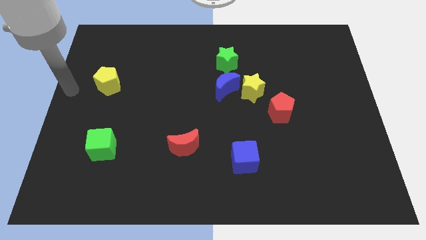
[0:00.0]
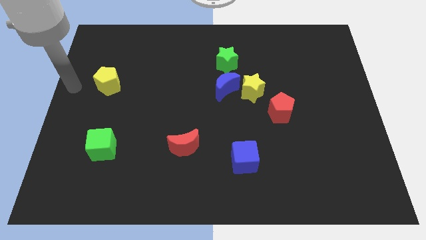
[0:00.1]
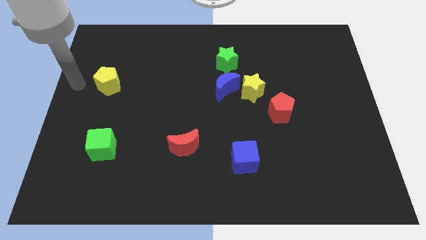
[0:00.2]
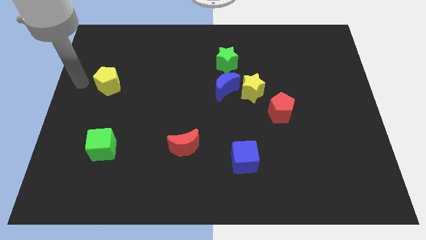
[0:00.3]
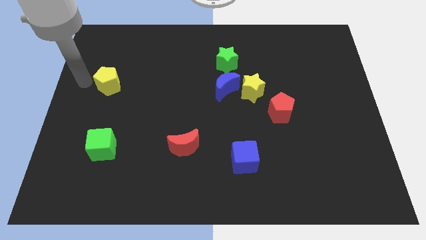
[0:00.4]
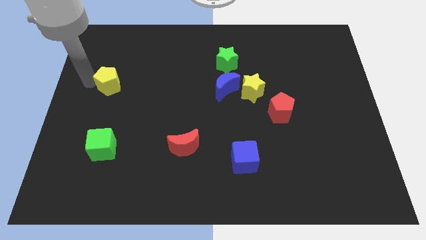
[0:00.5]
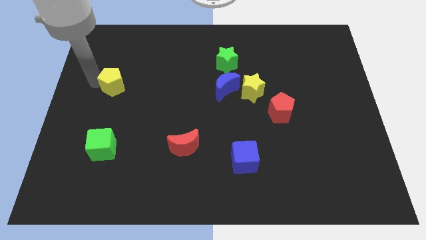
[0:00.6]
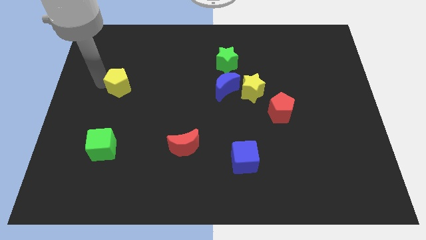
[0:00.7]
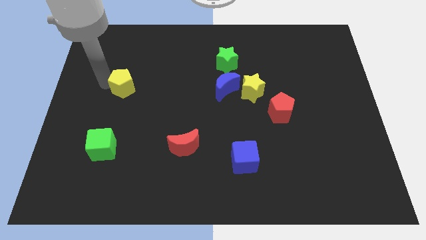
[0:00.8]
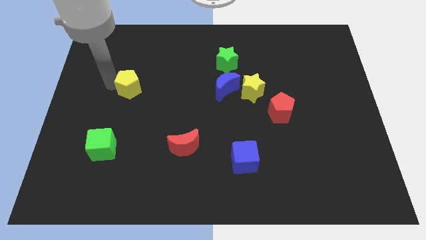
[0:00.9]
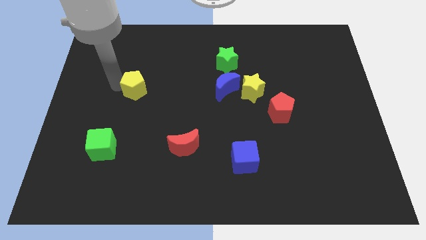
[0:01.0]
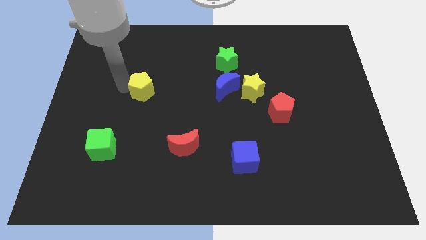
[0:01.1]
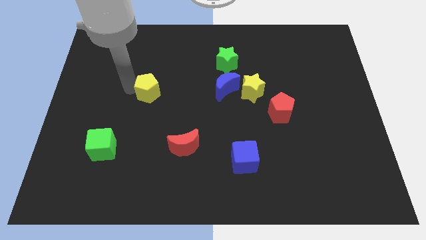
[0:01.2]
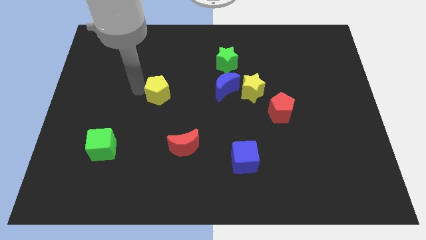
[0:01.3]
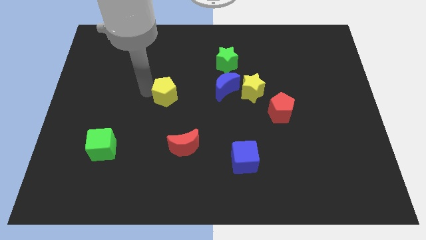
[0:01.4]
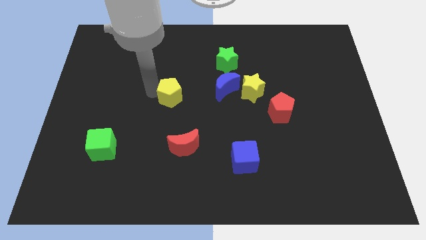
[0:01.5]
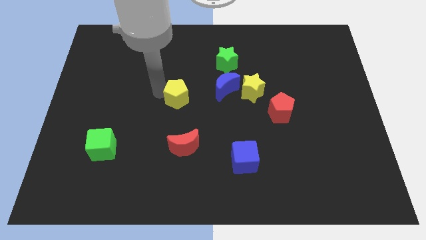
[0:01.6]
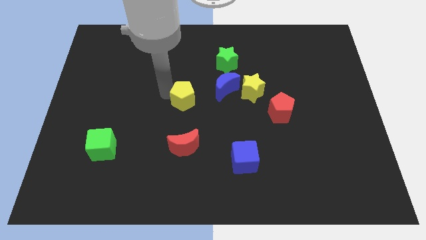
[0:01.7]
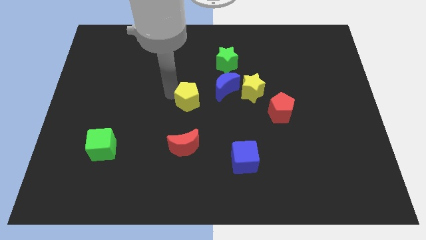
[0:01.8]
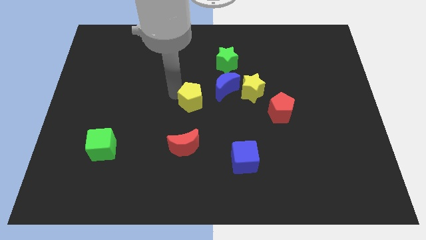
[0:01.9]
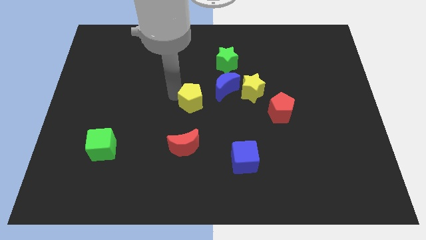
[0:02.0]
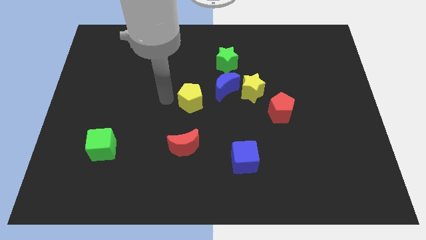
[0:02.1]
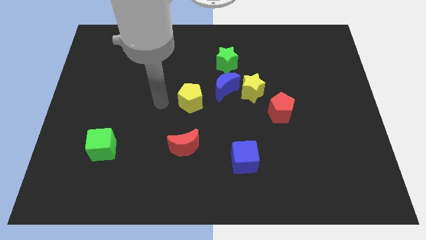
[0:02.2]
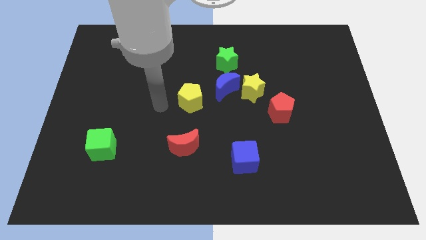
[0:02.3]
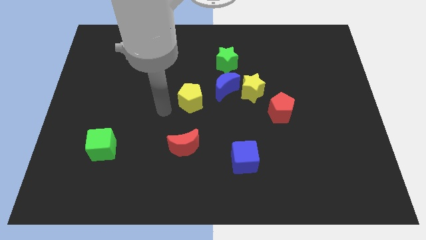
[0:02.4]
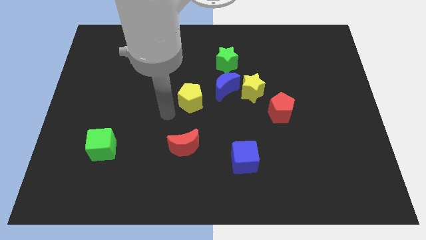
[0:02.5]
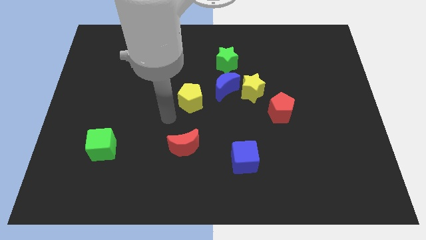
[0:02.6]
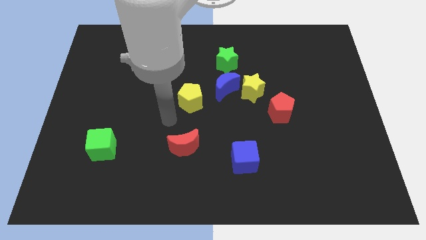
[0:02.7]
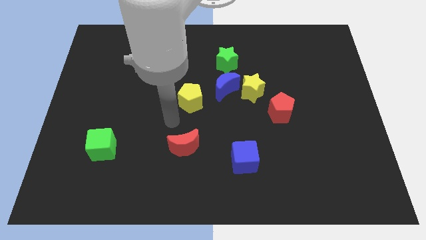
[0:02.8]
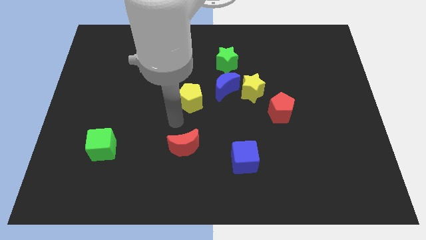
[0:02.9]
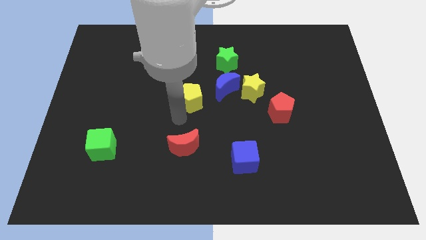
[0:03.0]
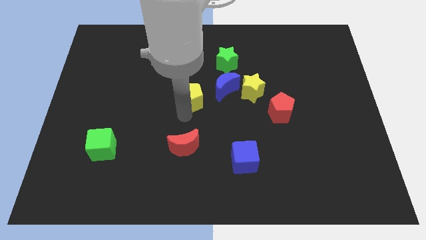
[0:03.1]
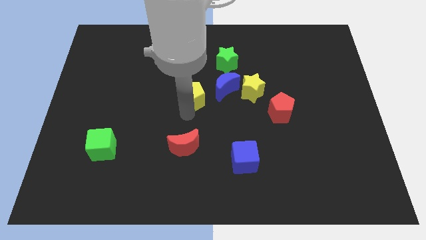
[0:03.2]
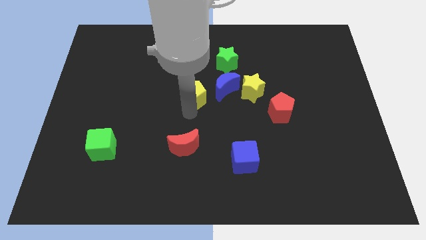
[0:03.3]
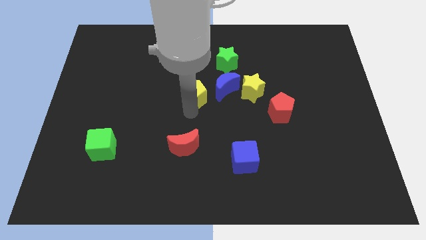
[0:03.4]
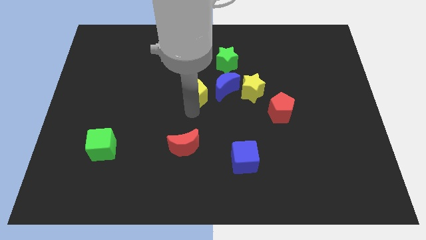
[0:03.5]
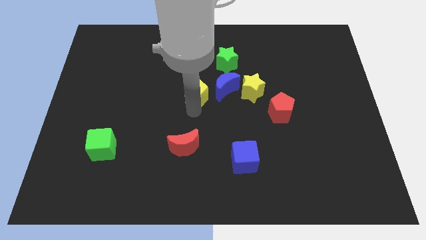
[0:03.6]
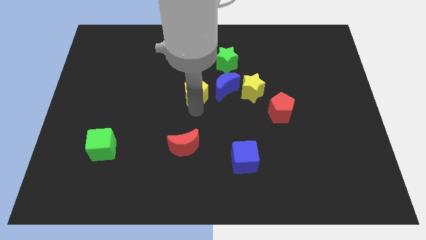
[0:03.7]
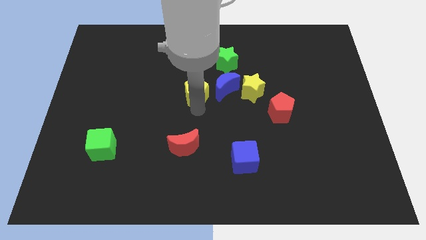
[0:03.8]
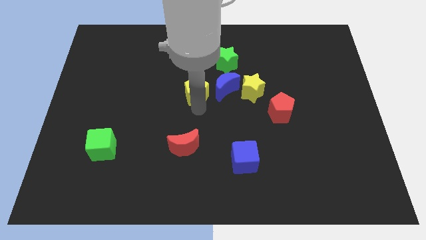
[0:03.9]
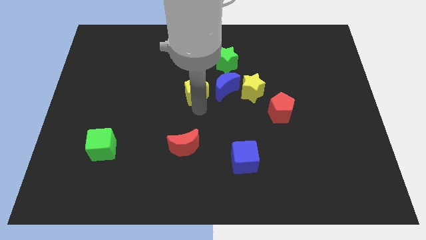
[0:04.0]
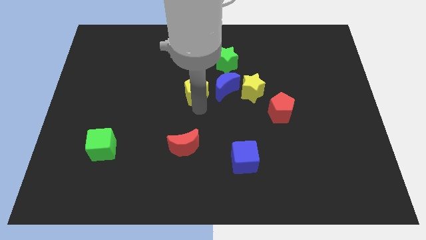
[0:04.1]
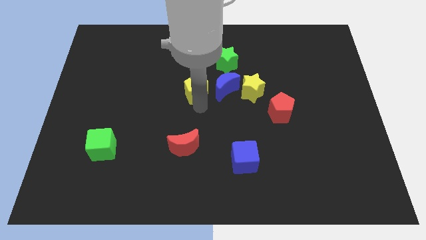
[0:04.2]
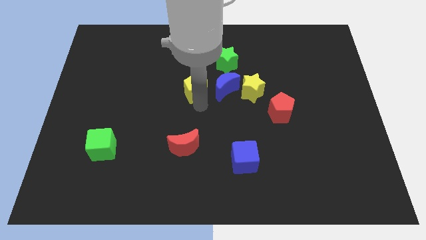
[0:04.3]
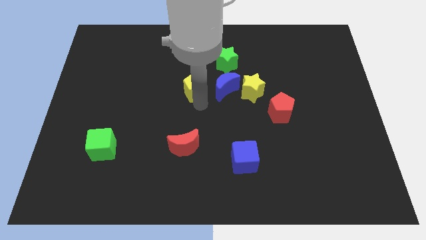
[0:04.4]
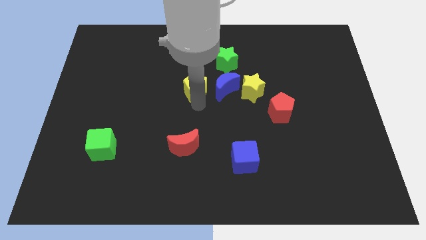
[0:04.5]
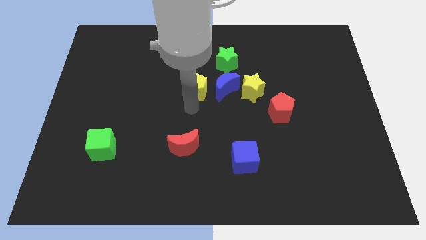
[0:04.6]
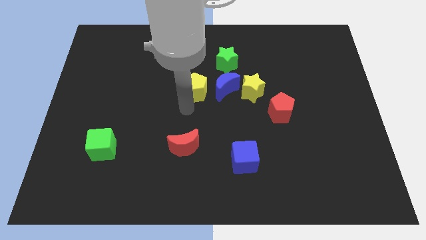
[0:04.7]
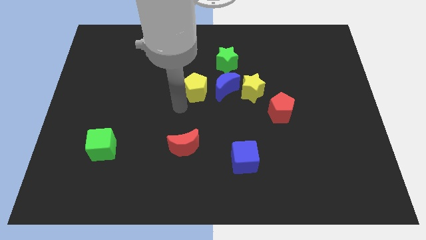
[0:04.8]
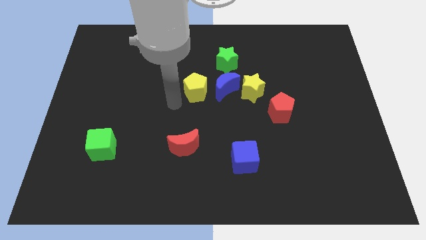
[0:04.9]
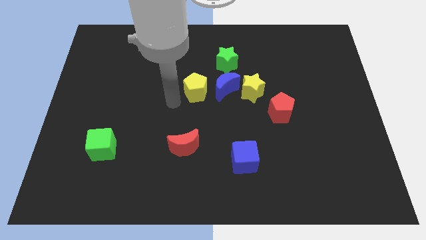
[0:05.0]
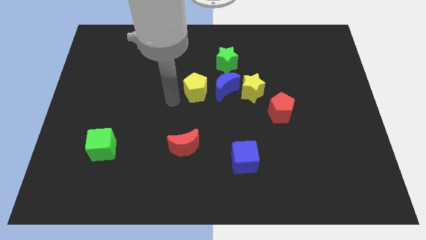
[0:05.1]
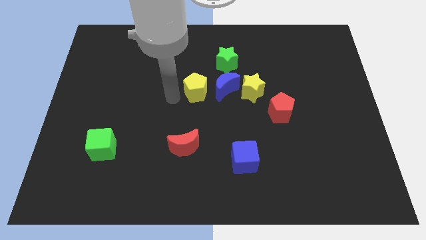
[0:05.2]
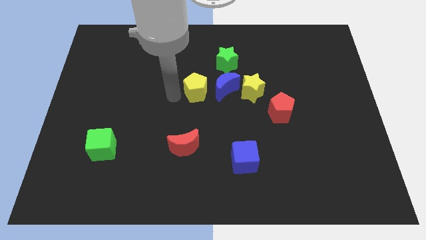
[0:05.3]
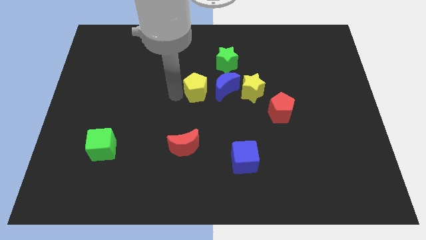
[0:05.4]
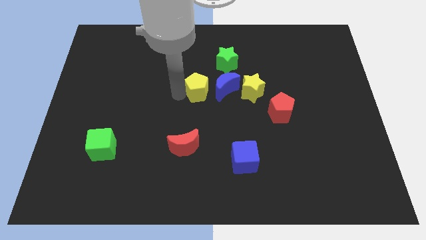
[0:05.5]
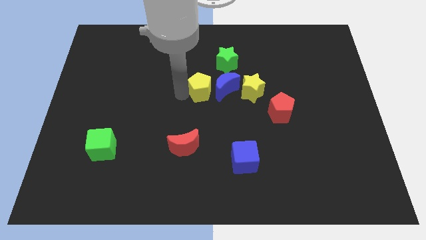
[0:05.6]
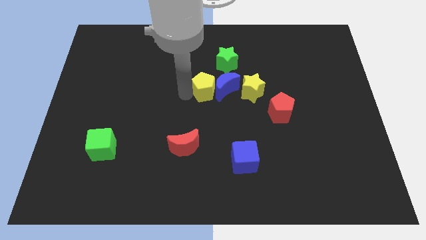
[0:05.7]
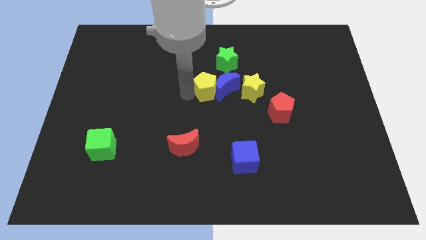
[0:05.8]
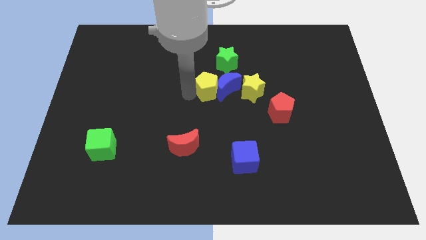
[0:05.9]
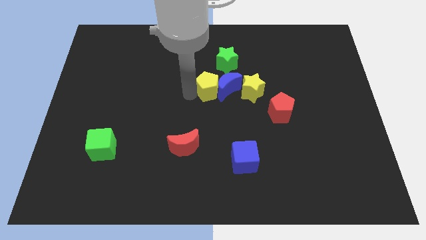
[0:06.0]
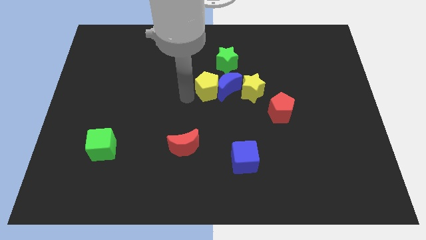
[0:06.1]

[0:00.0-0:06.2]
push the yellow pentagon to the left of the blue crescent

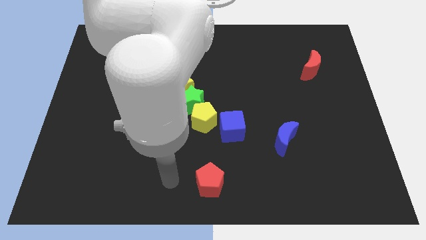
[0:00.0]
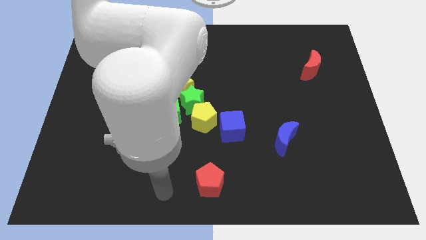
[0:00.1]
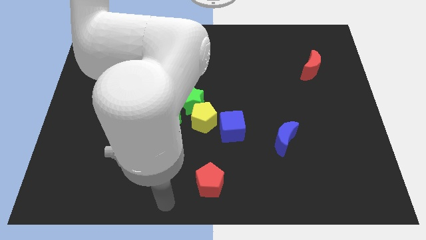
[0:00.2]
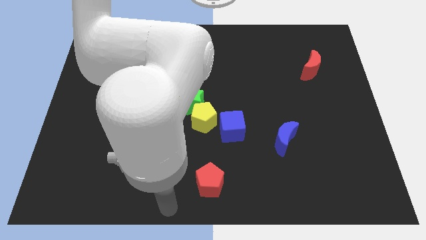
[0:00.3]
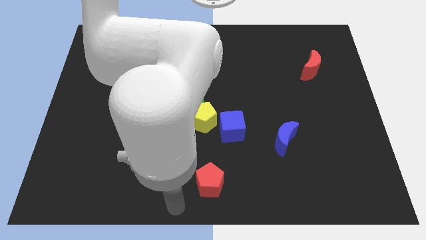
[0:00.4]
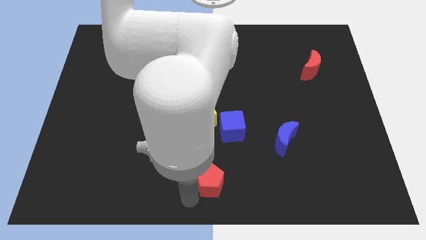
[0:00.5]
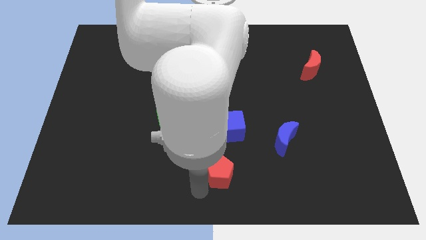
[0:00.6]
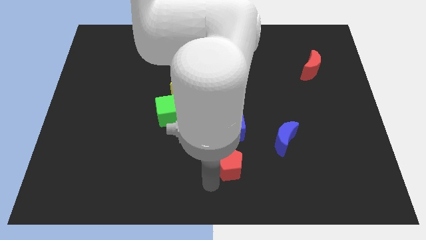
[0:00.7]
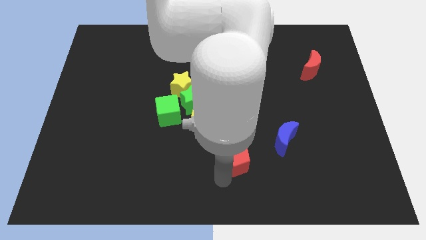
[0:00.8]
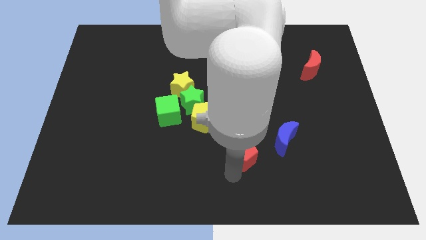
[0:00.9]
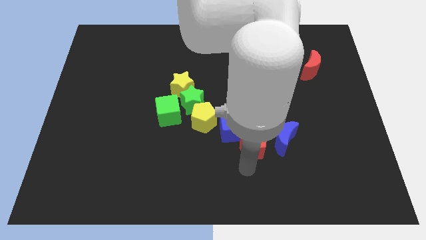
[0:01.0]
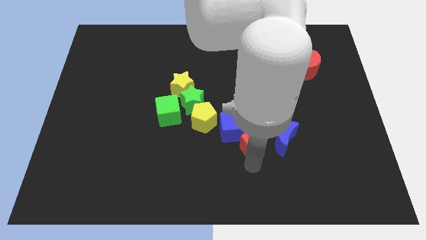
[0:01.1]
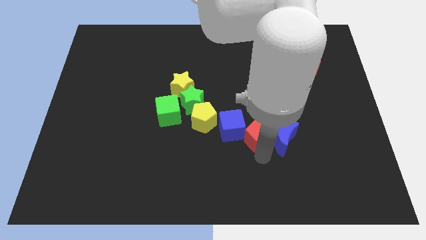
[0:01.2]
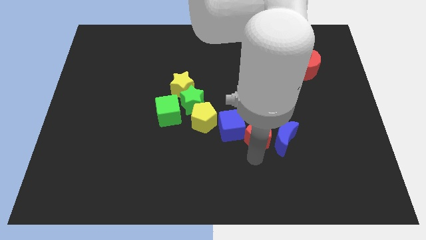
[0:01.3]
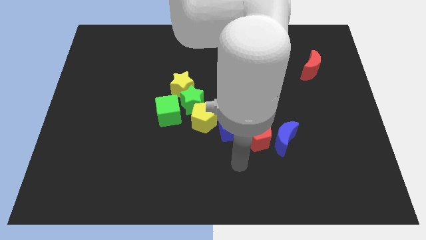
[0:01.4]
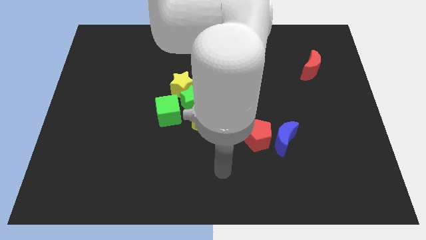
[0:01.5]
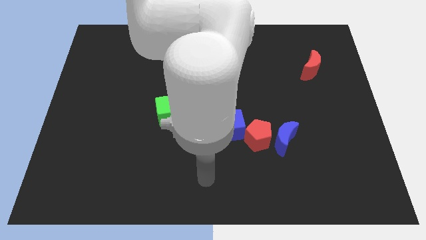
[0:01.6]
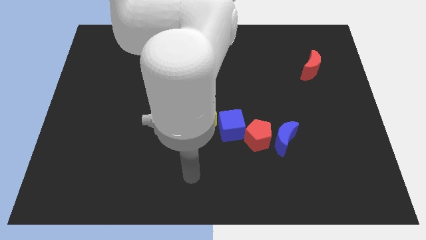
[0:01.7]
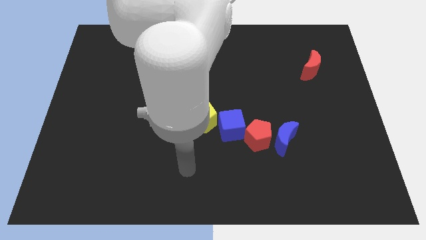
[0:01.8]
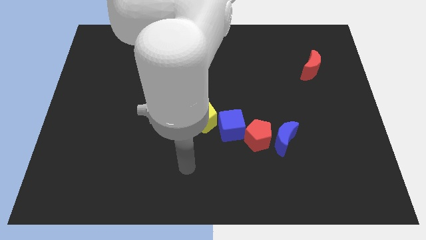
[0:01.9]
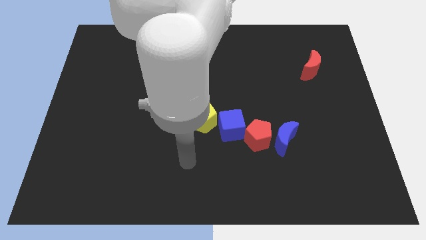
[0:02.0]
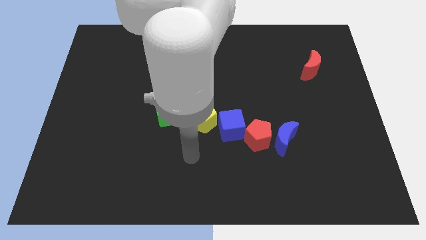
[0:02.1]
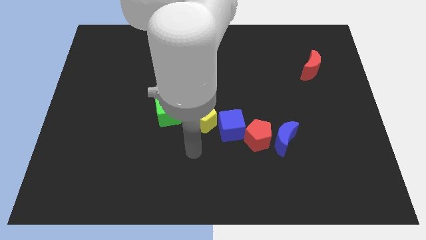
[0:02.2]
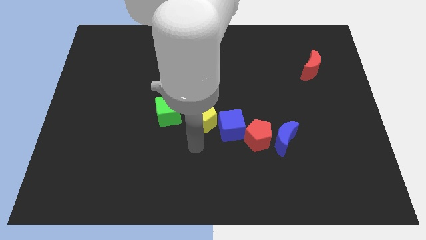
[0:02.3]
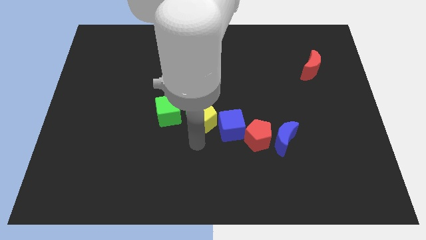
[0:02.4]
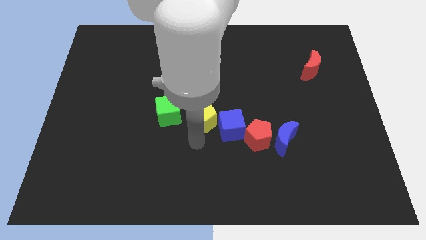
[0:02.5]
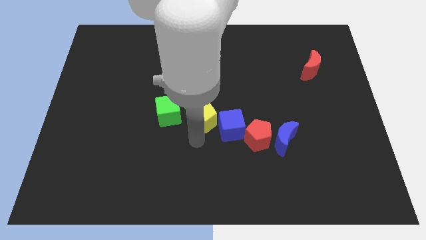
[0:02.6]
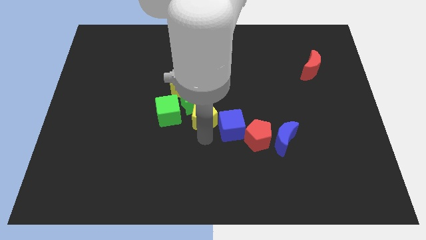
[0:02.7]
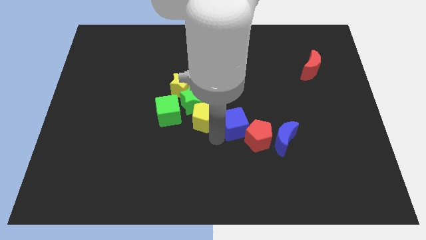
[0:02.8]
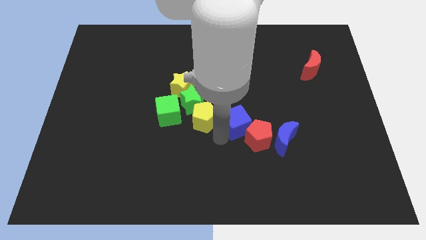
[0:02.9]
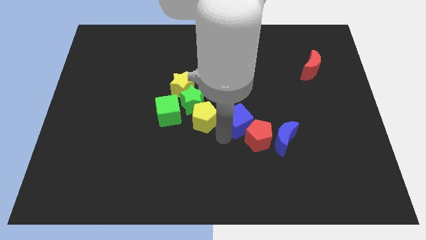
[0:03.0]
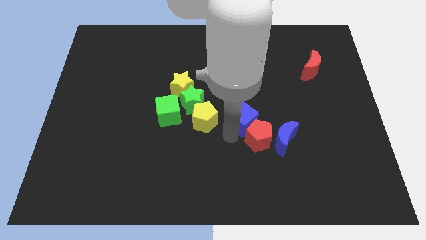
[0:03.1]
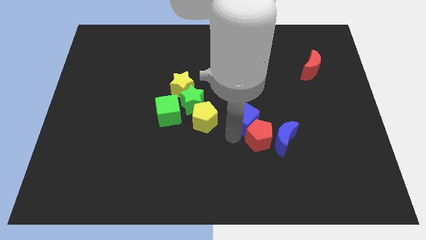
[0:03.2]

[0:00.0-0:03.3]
move the red penatgon in between the blue blocks
